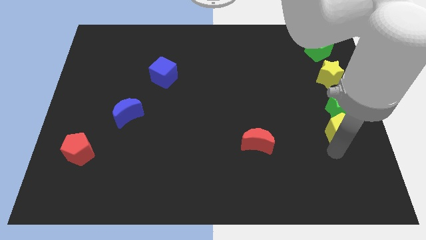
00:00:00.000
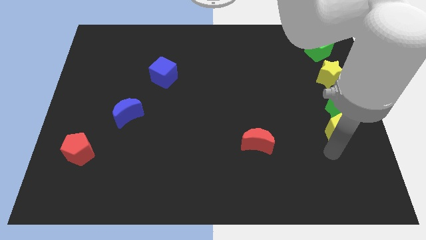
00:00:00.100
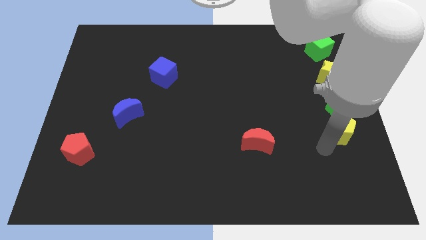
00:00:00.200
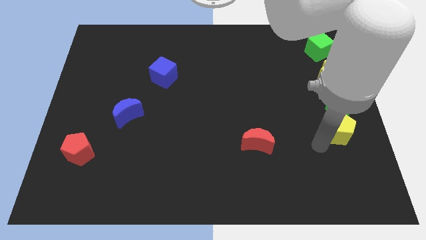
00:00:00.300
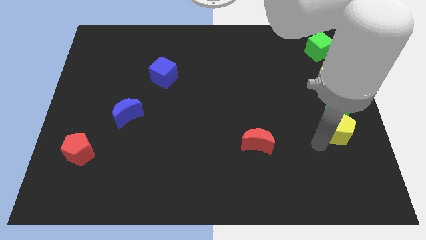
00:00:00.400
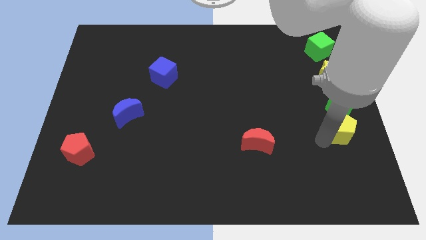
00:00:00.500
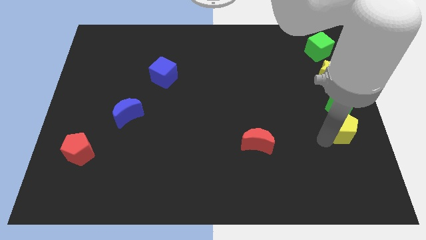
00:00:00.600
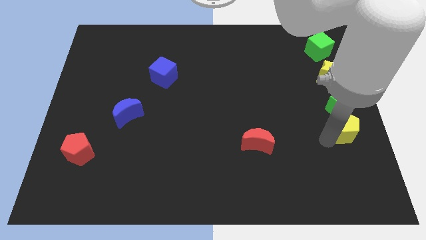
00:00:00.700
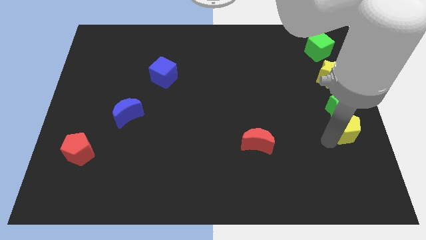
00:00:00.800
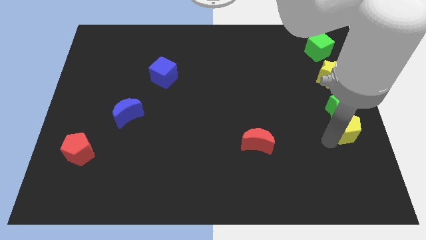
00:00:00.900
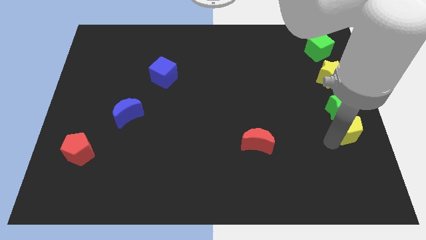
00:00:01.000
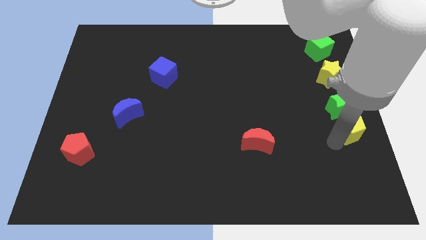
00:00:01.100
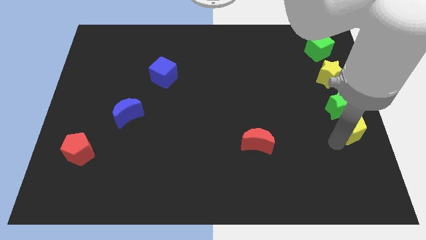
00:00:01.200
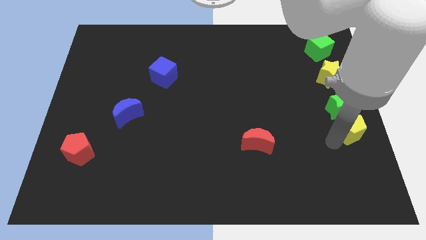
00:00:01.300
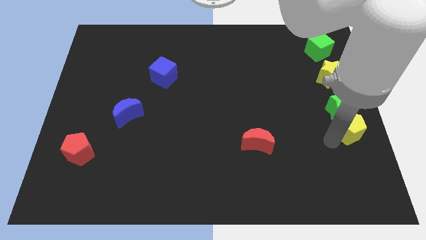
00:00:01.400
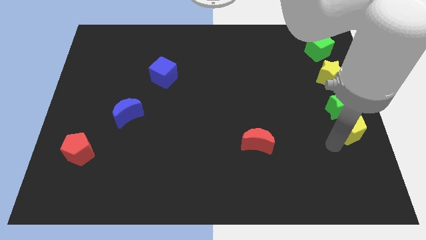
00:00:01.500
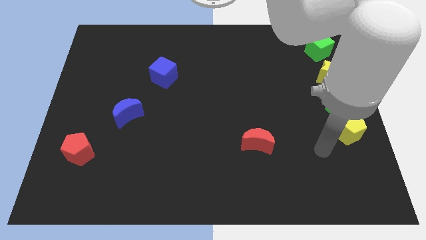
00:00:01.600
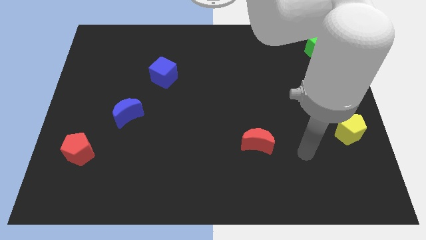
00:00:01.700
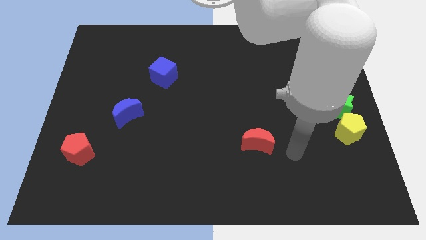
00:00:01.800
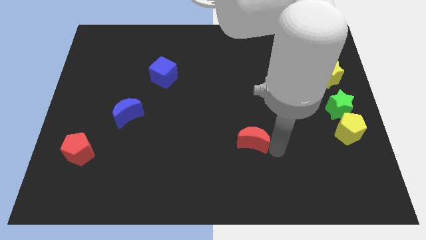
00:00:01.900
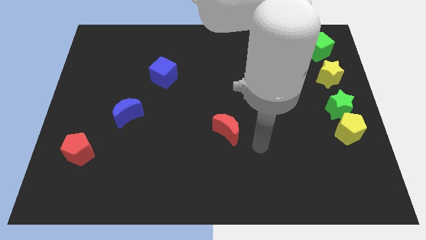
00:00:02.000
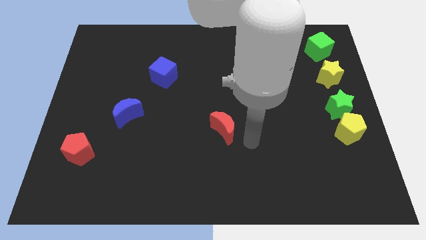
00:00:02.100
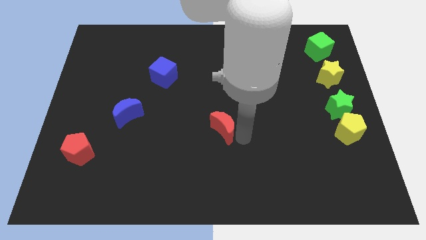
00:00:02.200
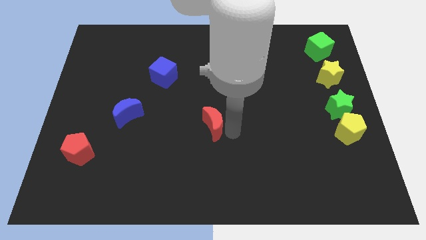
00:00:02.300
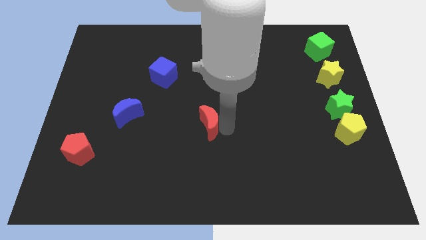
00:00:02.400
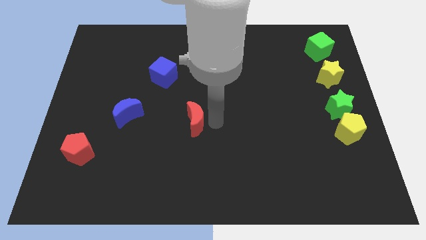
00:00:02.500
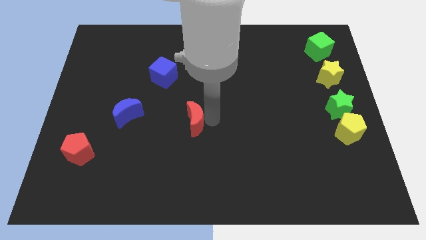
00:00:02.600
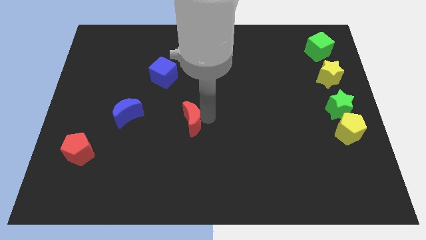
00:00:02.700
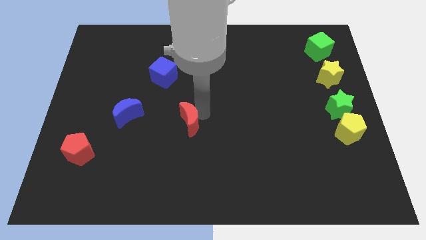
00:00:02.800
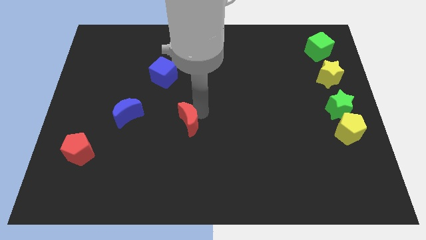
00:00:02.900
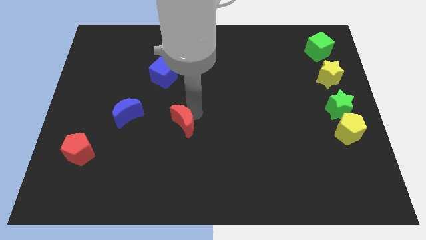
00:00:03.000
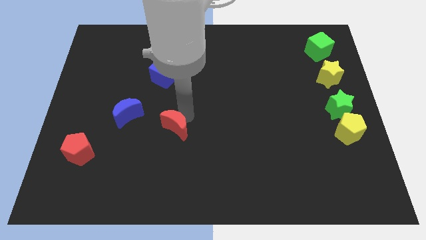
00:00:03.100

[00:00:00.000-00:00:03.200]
place red moon parallel to blue moon

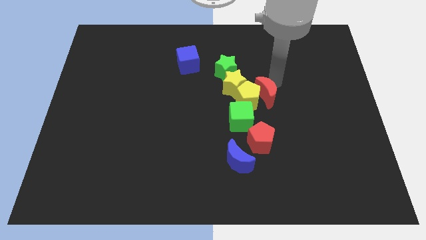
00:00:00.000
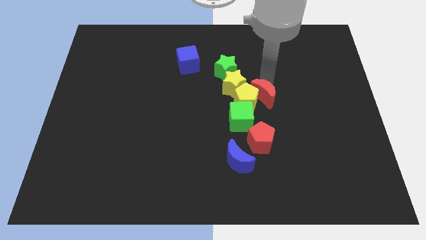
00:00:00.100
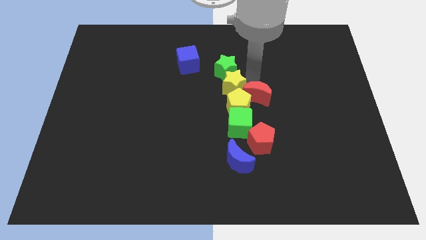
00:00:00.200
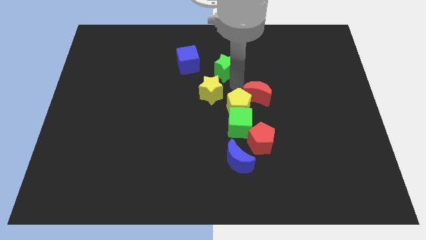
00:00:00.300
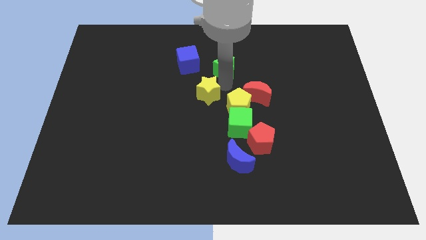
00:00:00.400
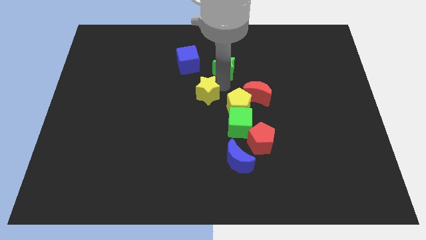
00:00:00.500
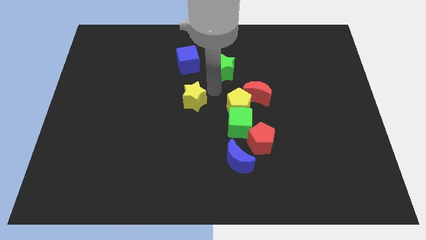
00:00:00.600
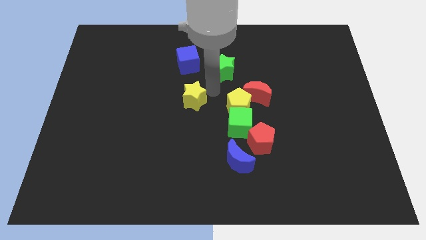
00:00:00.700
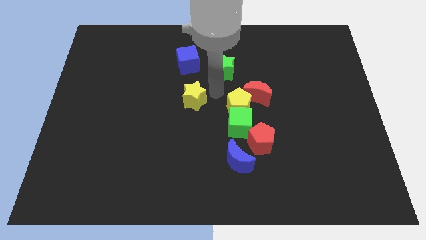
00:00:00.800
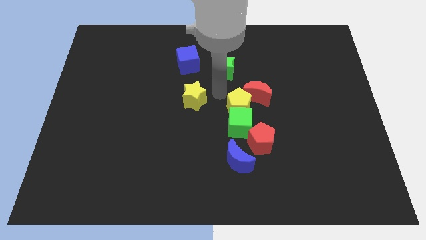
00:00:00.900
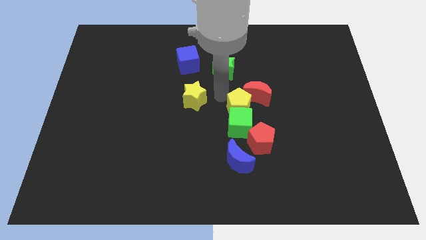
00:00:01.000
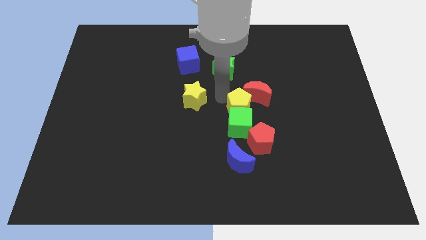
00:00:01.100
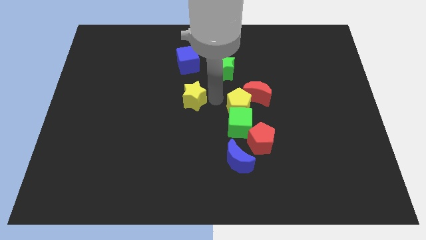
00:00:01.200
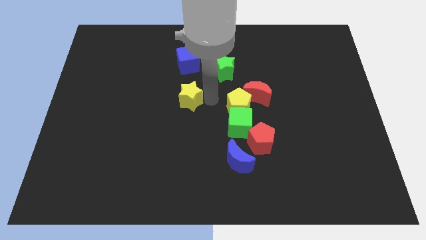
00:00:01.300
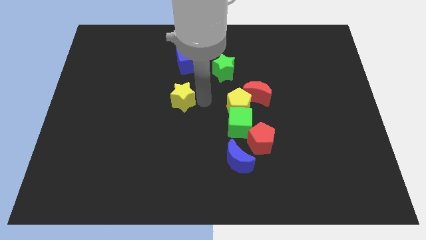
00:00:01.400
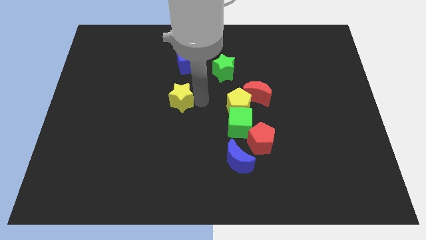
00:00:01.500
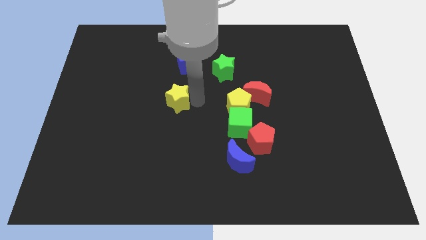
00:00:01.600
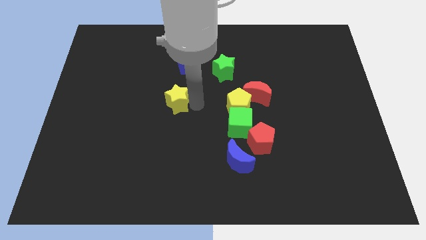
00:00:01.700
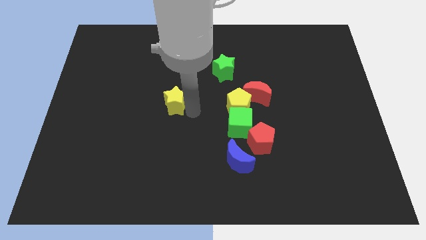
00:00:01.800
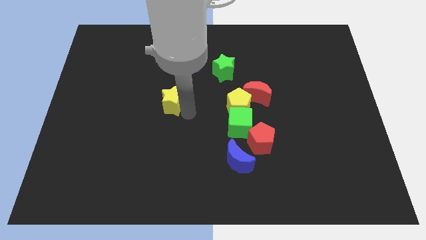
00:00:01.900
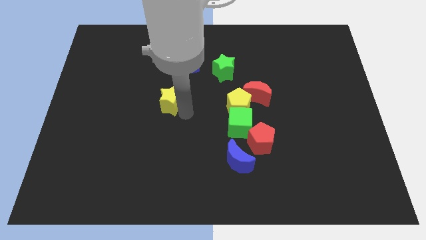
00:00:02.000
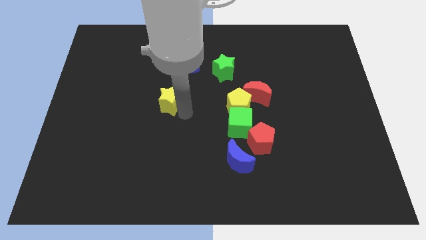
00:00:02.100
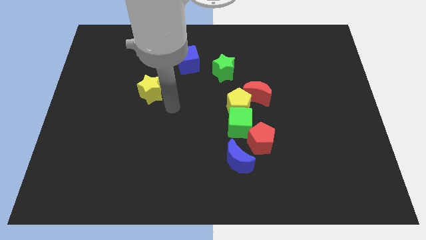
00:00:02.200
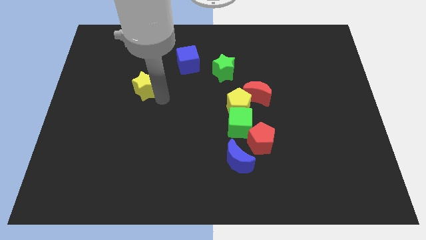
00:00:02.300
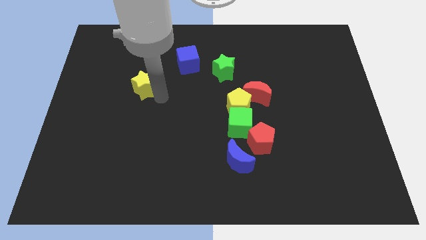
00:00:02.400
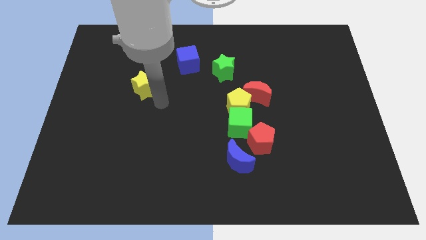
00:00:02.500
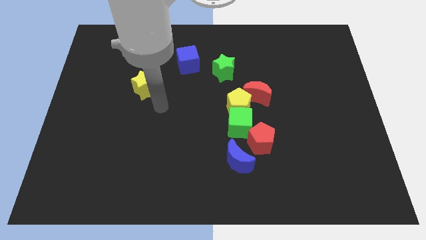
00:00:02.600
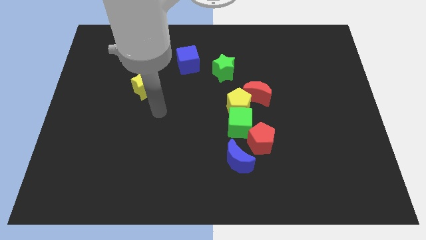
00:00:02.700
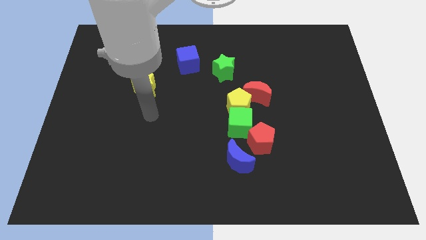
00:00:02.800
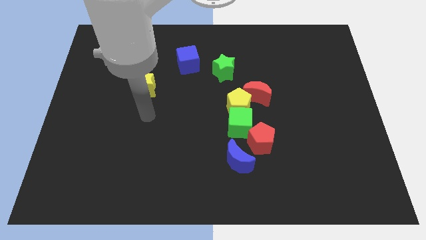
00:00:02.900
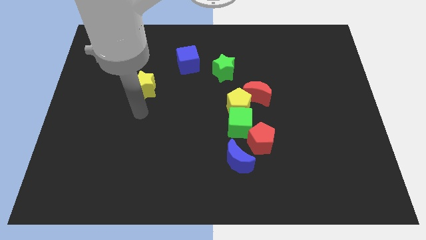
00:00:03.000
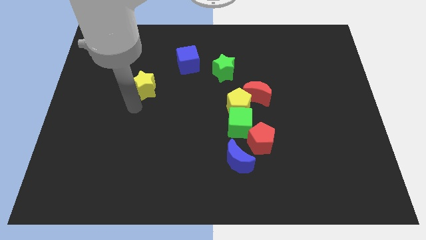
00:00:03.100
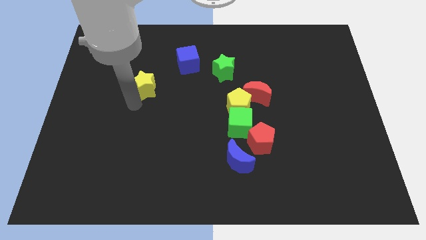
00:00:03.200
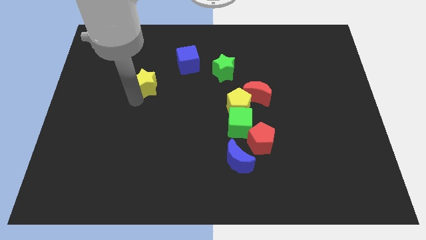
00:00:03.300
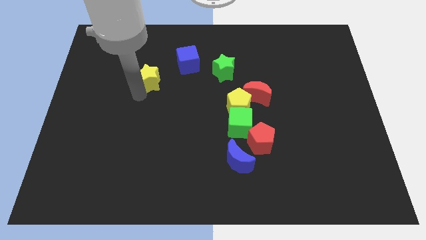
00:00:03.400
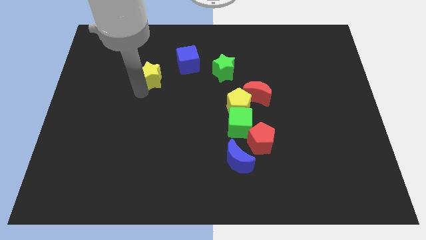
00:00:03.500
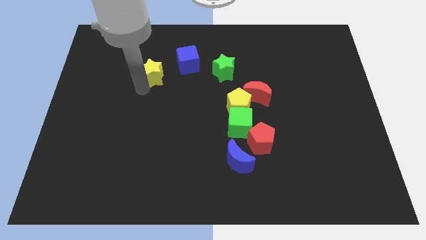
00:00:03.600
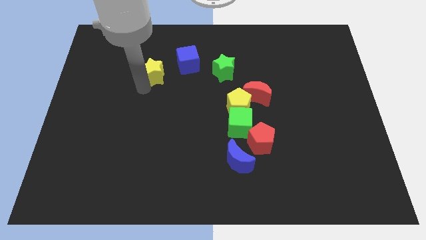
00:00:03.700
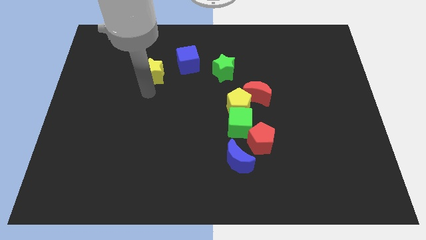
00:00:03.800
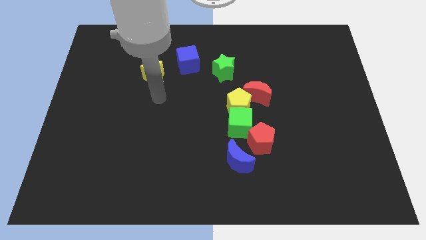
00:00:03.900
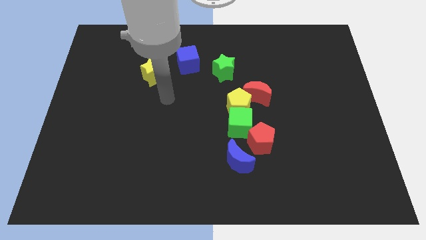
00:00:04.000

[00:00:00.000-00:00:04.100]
push yellow star to the left side of the blue cube

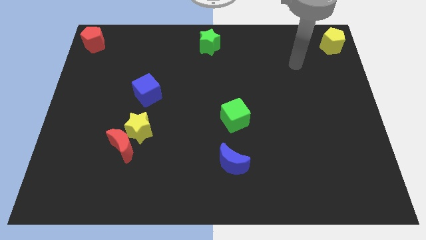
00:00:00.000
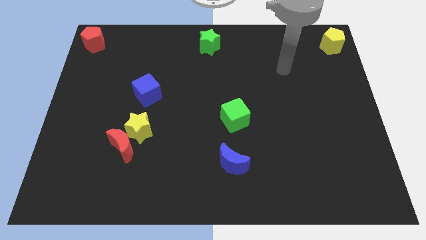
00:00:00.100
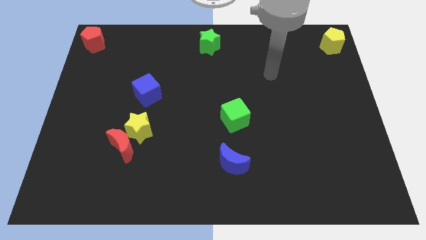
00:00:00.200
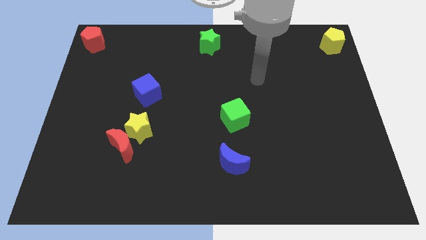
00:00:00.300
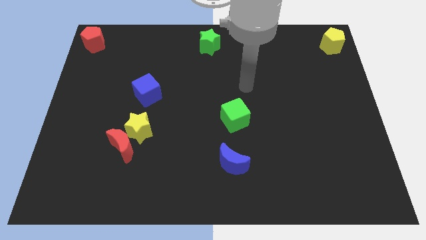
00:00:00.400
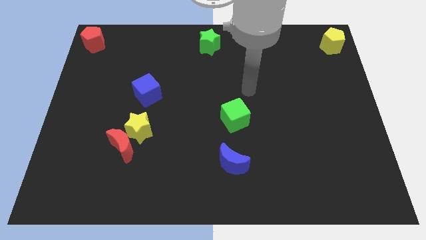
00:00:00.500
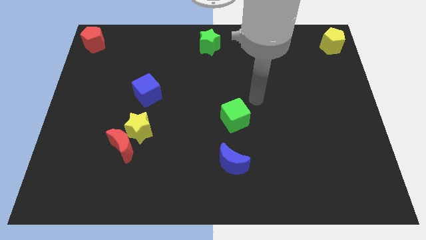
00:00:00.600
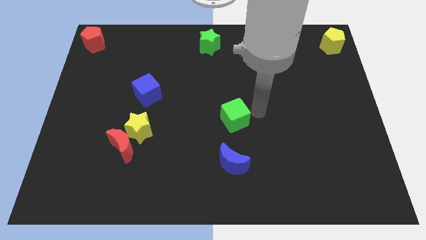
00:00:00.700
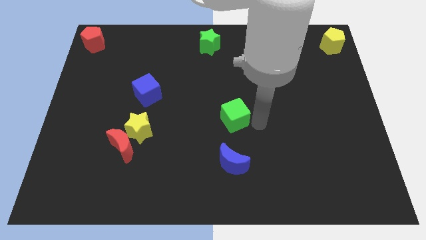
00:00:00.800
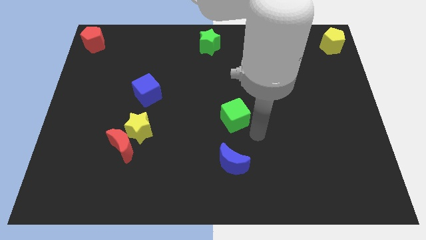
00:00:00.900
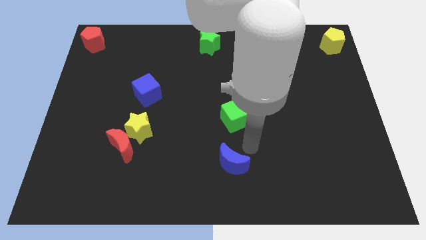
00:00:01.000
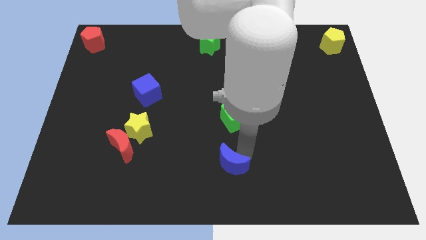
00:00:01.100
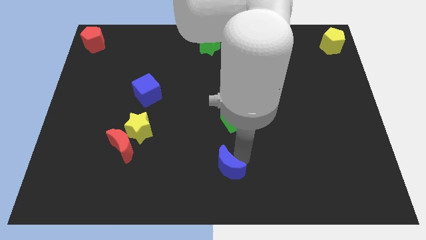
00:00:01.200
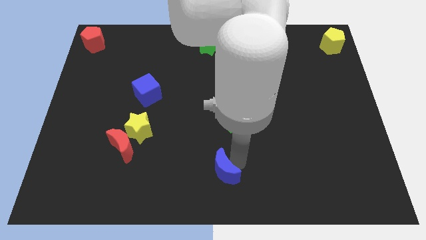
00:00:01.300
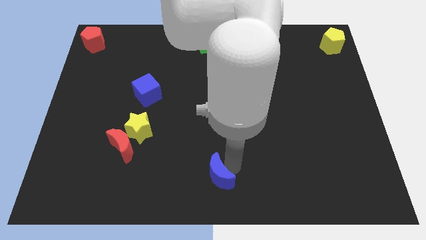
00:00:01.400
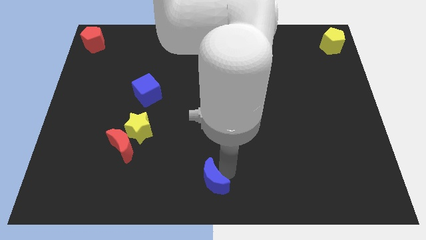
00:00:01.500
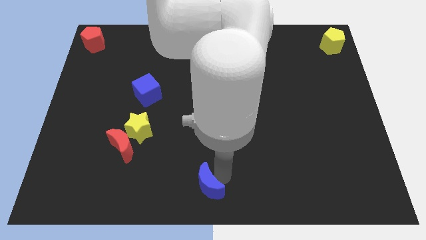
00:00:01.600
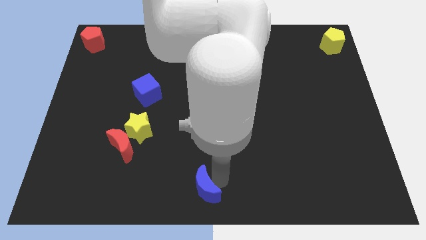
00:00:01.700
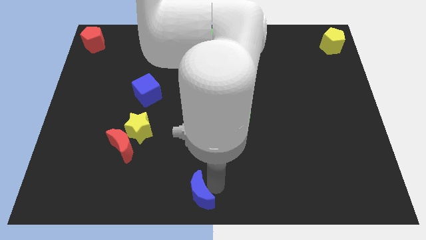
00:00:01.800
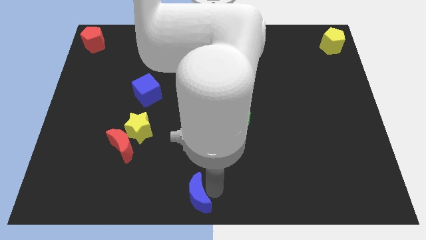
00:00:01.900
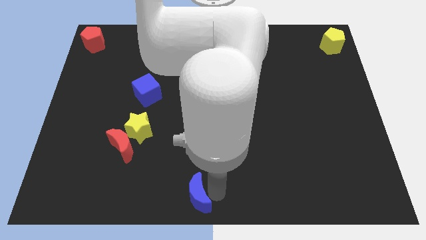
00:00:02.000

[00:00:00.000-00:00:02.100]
push blue moon to the bottom center
